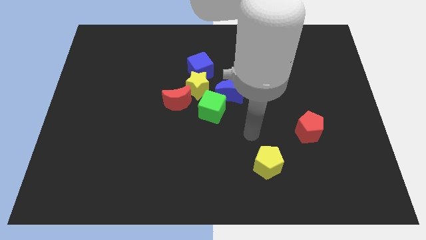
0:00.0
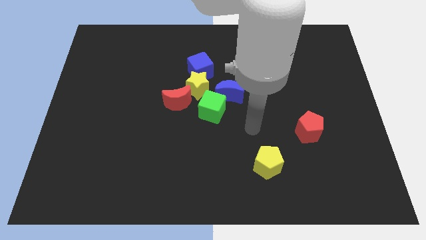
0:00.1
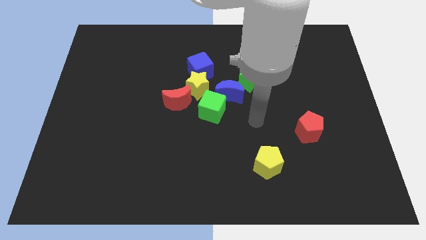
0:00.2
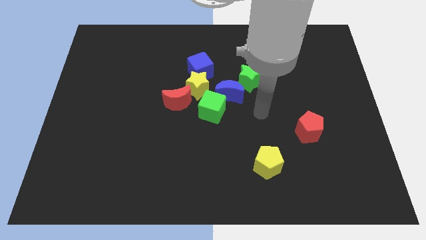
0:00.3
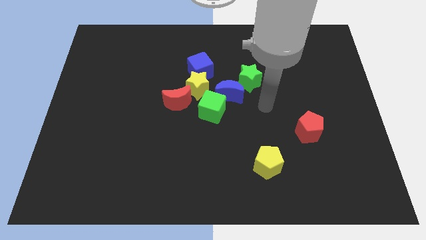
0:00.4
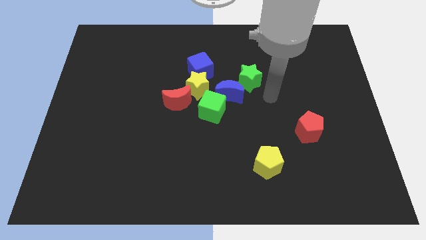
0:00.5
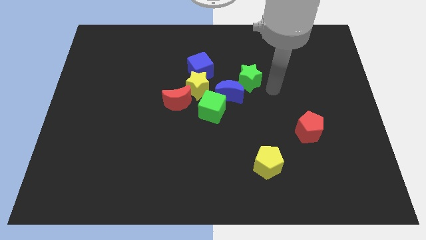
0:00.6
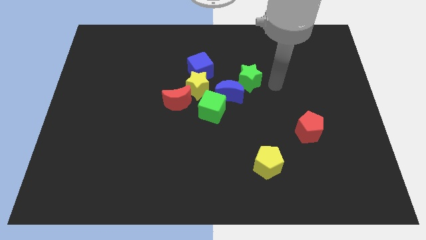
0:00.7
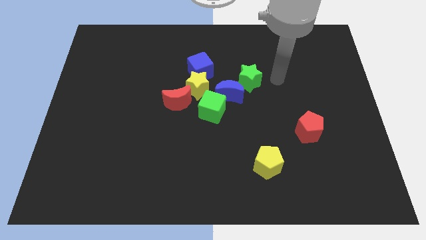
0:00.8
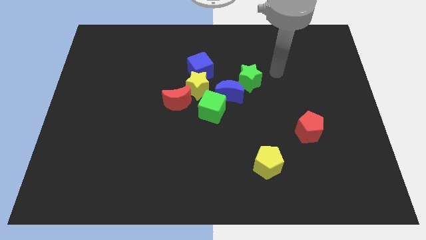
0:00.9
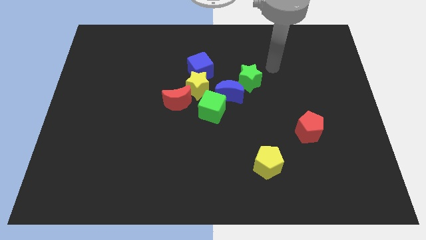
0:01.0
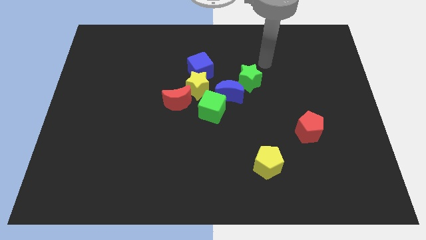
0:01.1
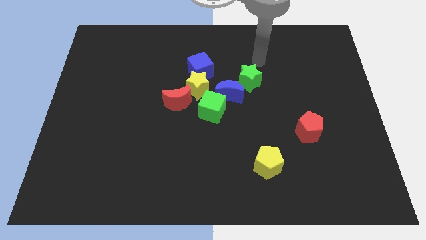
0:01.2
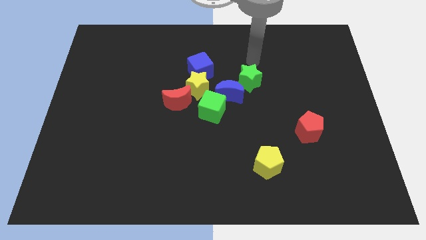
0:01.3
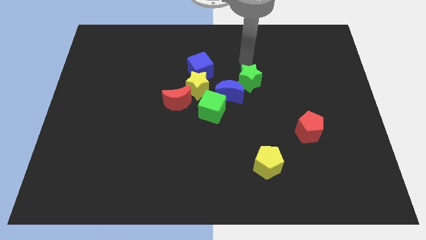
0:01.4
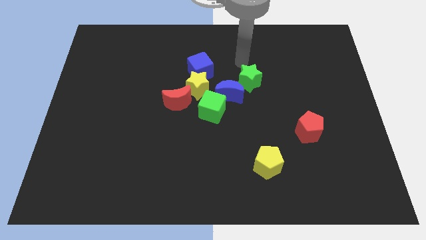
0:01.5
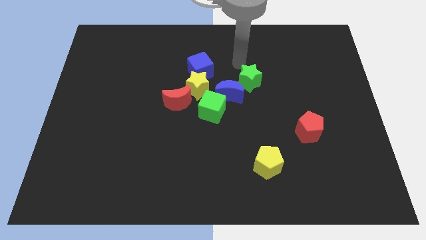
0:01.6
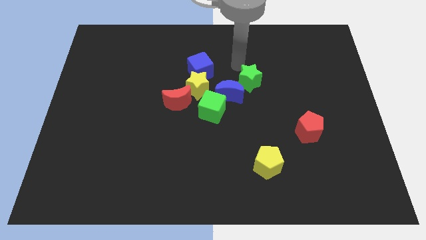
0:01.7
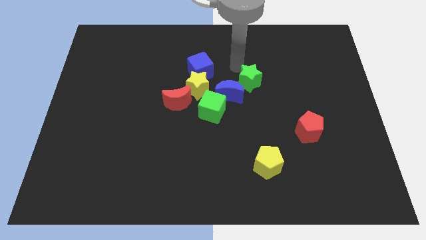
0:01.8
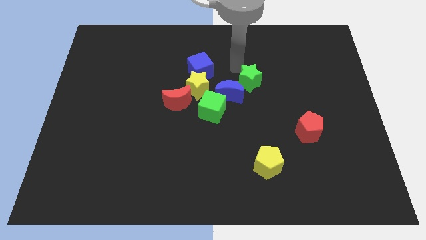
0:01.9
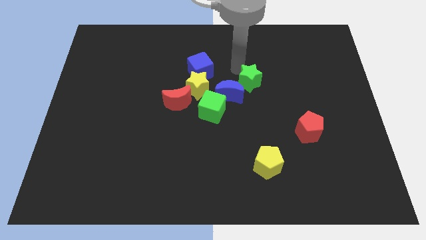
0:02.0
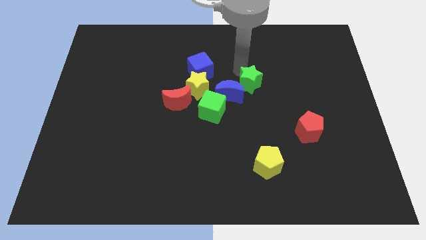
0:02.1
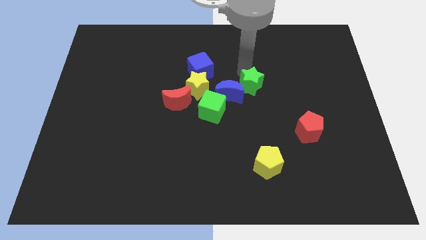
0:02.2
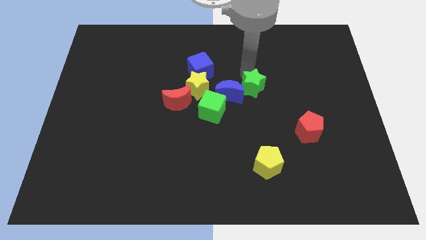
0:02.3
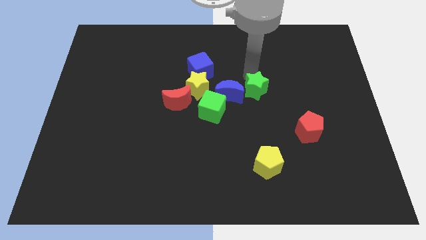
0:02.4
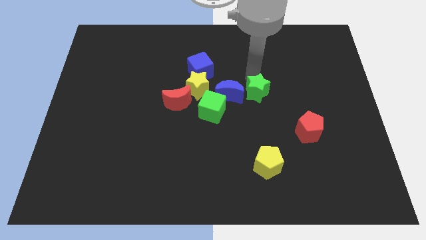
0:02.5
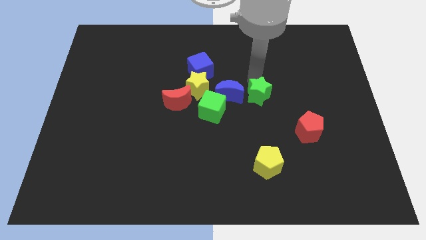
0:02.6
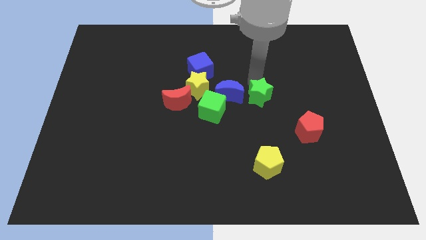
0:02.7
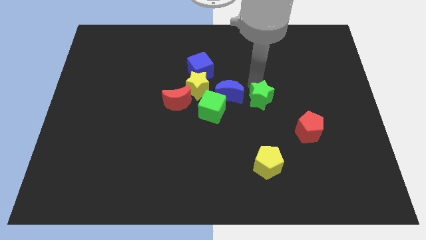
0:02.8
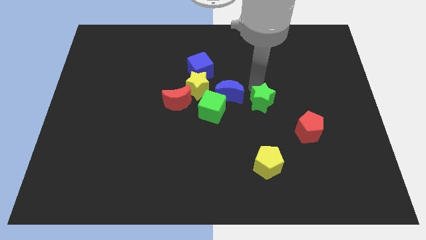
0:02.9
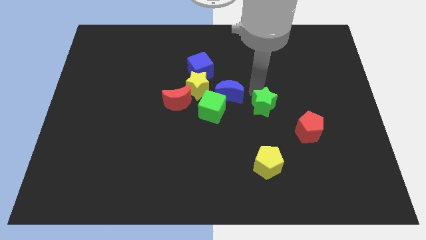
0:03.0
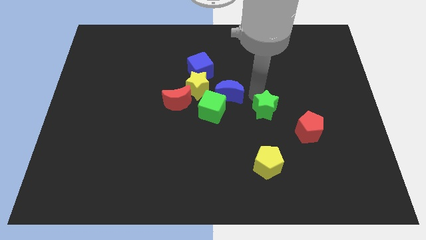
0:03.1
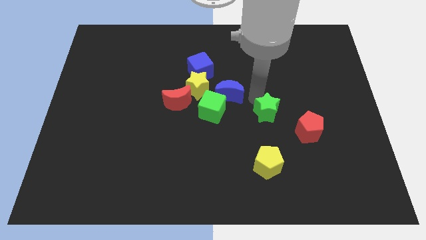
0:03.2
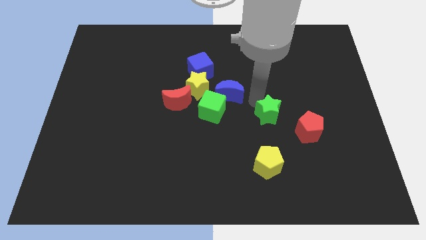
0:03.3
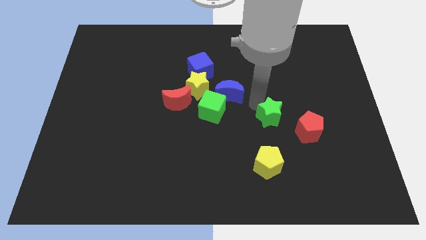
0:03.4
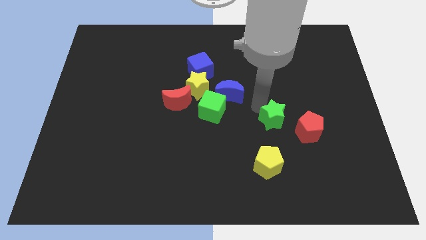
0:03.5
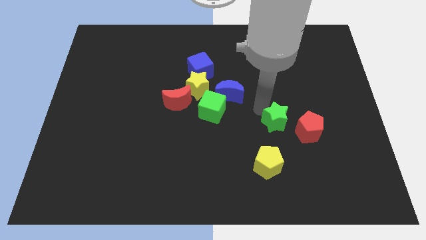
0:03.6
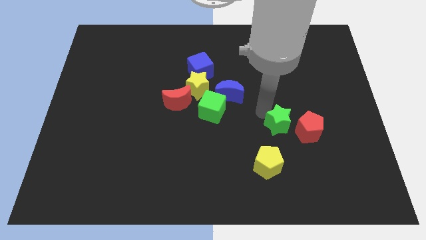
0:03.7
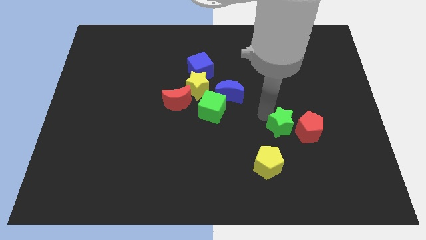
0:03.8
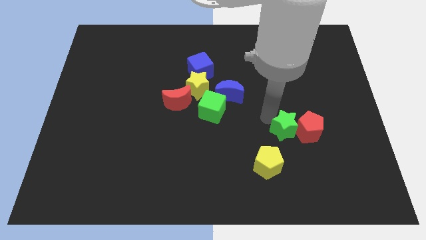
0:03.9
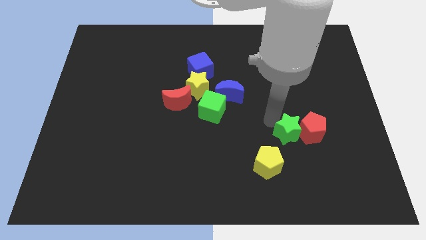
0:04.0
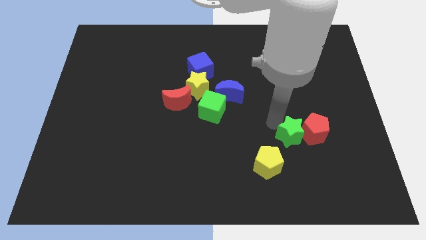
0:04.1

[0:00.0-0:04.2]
put the green star to the red pentagon

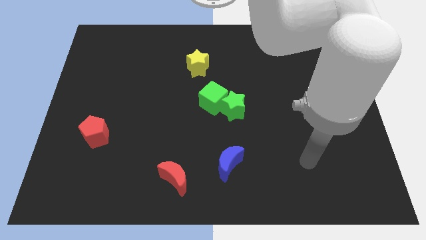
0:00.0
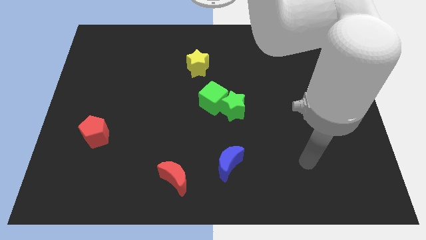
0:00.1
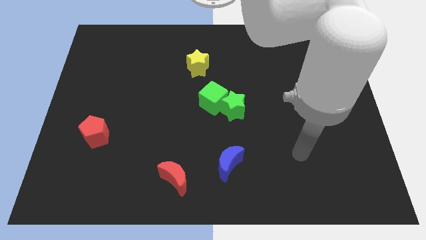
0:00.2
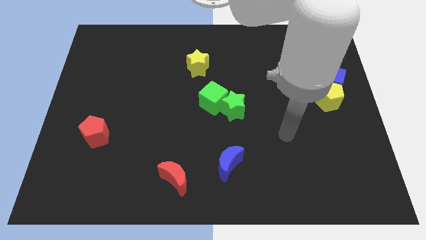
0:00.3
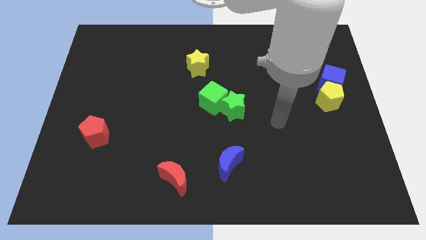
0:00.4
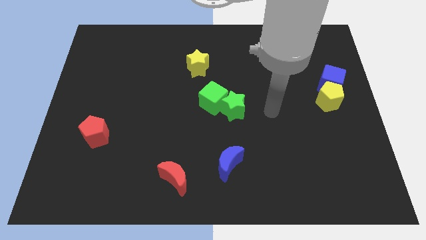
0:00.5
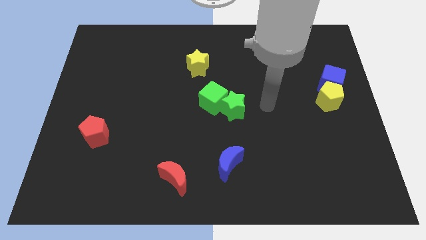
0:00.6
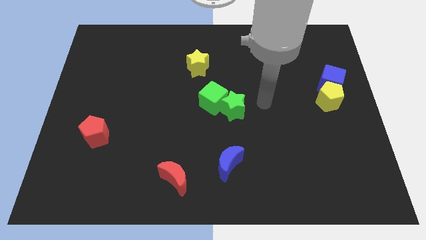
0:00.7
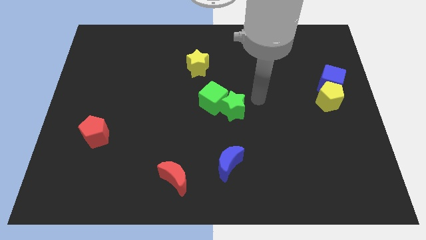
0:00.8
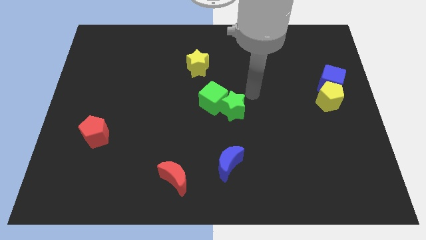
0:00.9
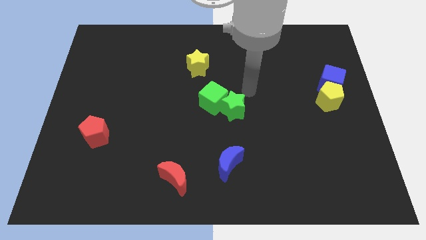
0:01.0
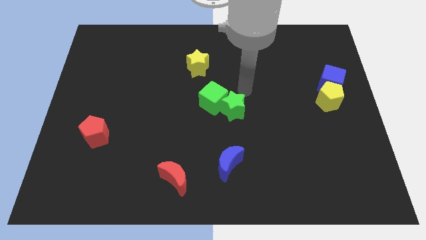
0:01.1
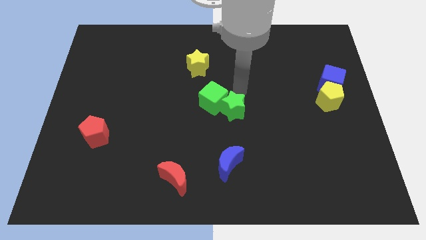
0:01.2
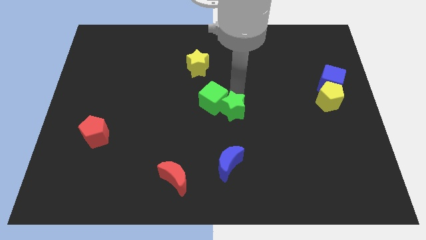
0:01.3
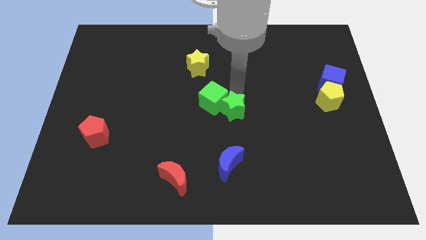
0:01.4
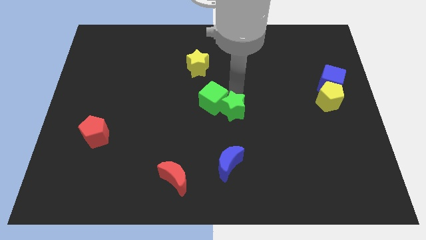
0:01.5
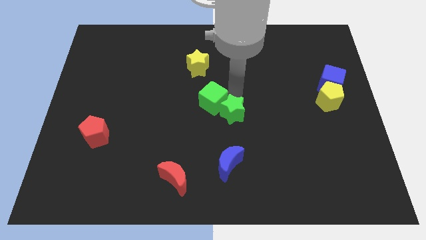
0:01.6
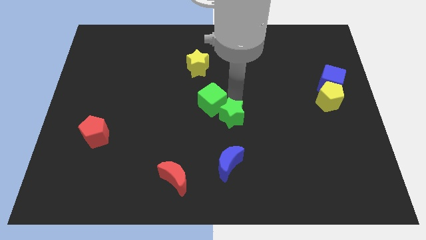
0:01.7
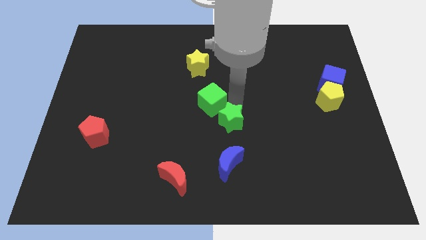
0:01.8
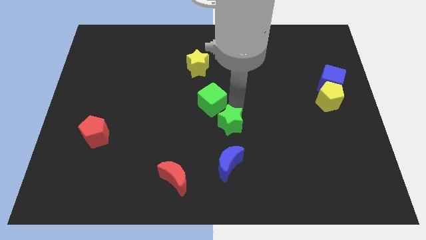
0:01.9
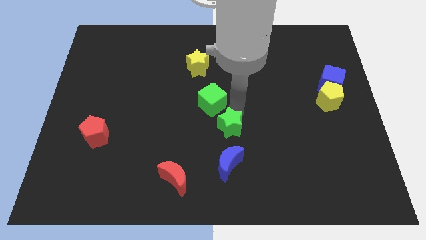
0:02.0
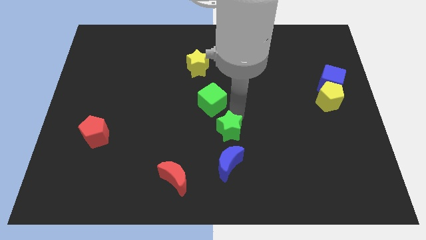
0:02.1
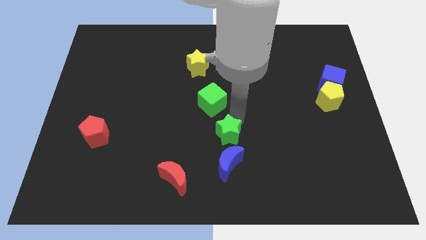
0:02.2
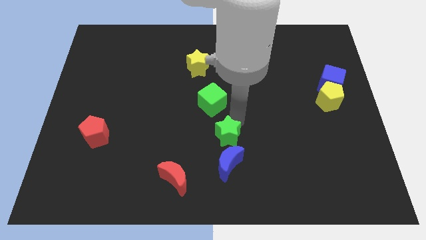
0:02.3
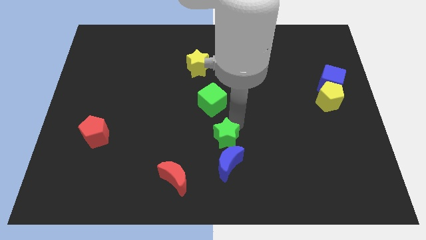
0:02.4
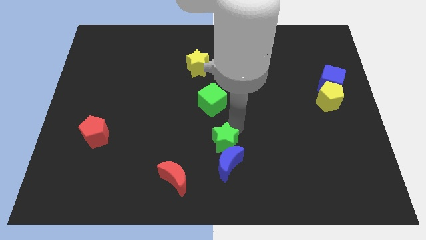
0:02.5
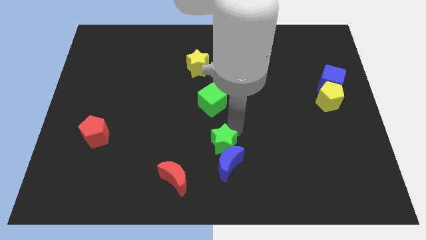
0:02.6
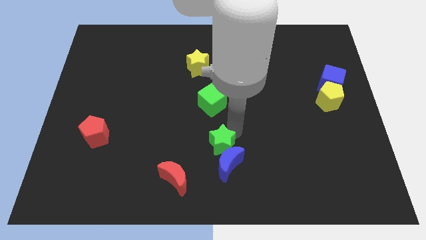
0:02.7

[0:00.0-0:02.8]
slide the green star towards the blue moon

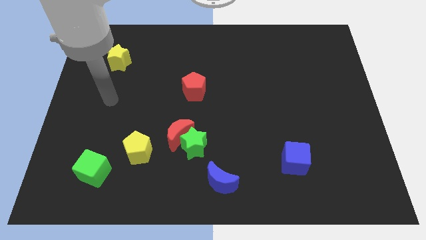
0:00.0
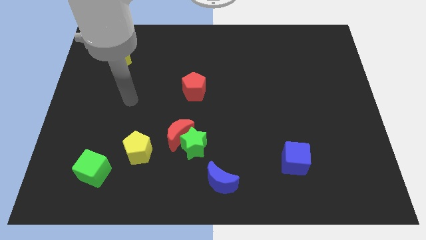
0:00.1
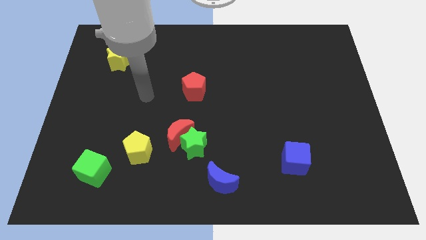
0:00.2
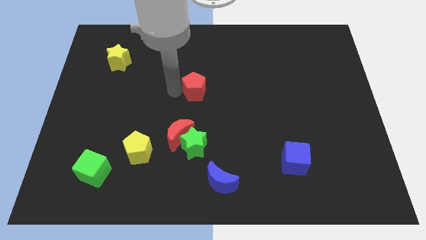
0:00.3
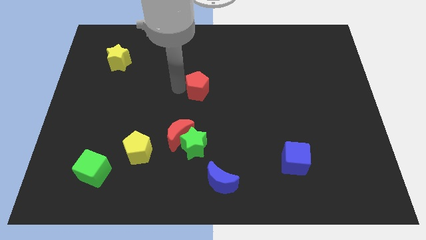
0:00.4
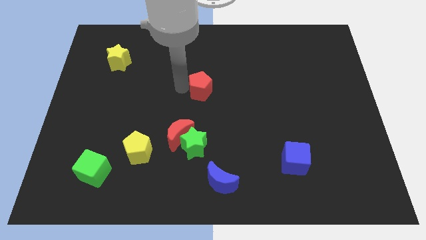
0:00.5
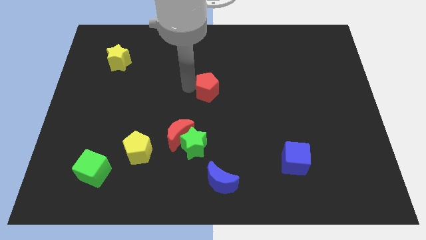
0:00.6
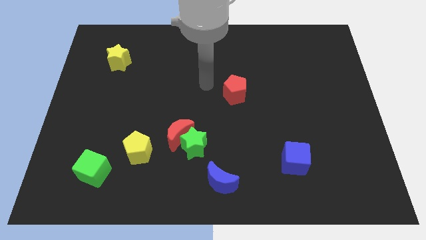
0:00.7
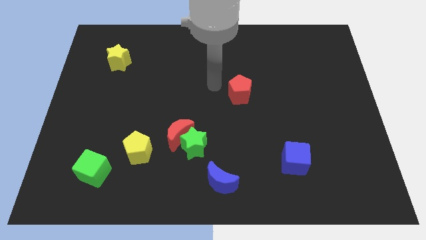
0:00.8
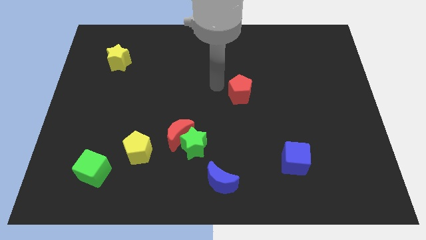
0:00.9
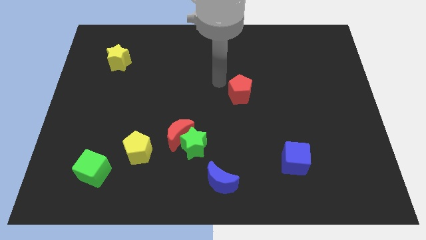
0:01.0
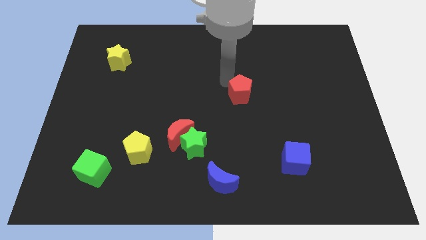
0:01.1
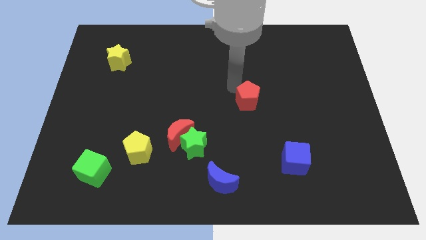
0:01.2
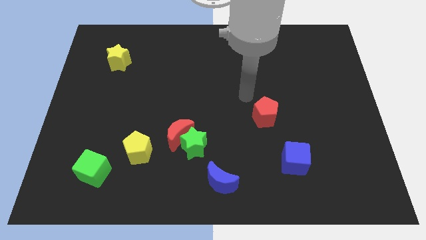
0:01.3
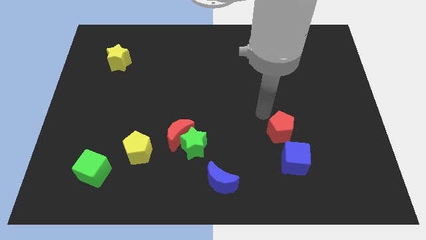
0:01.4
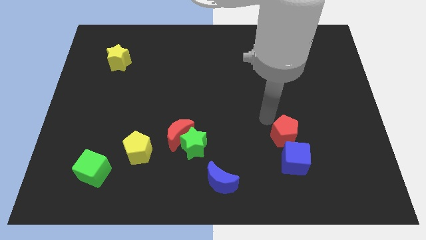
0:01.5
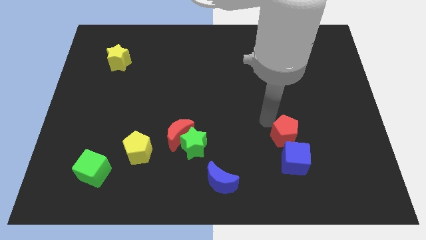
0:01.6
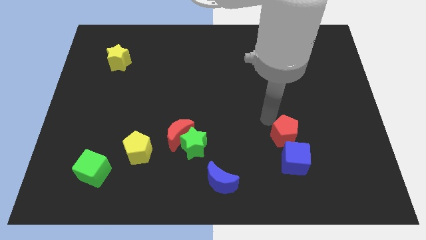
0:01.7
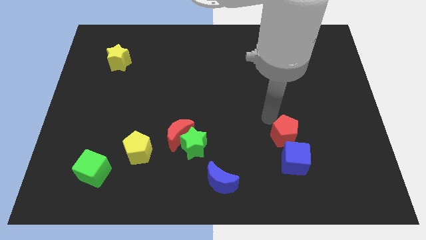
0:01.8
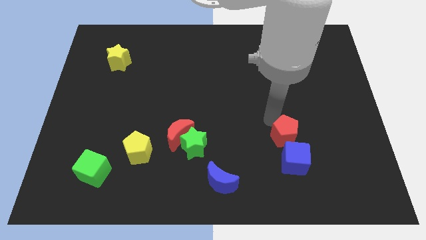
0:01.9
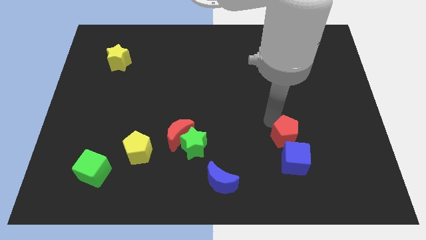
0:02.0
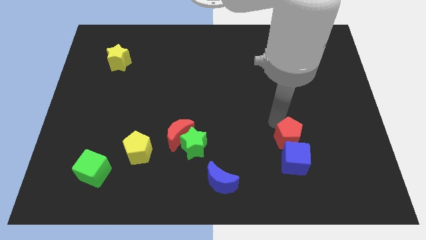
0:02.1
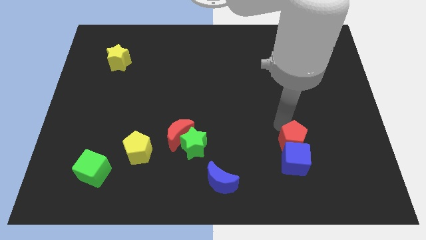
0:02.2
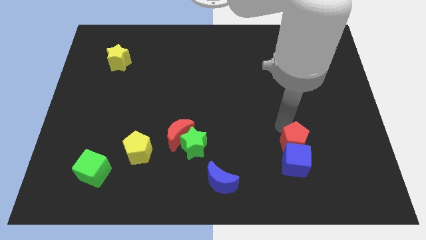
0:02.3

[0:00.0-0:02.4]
put the red pentagon to the blue cube
